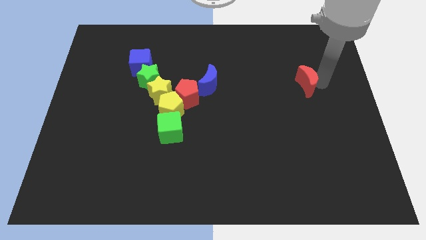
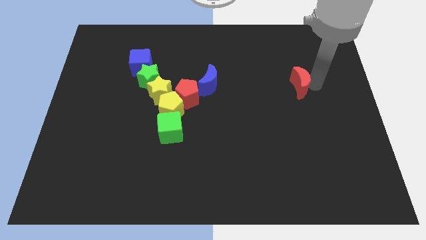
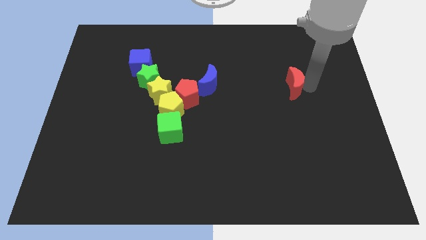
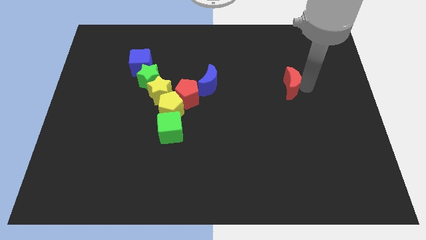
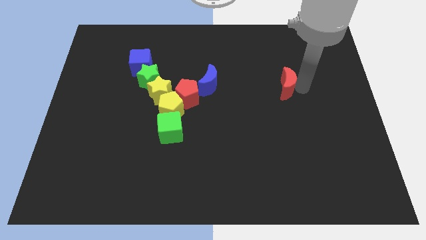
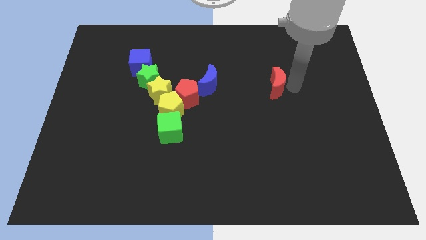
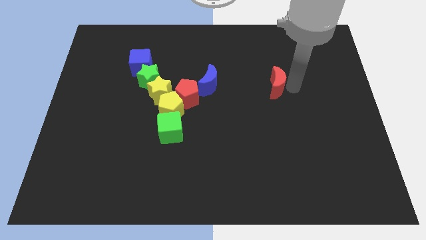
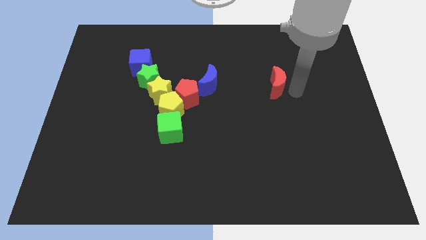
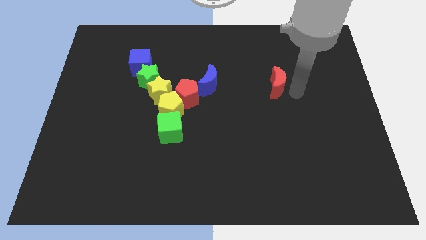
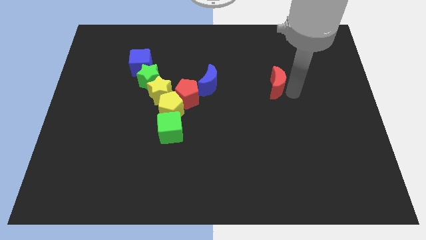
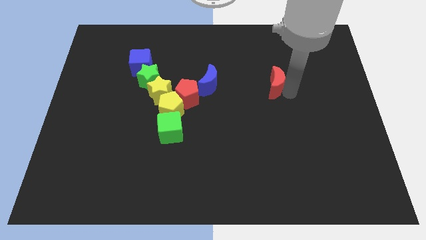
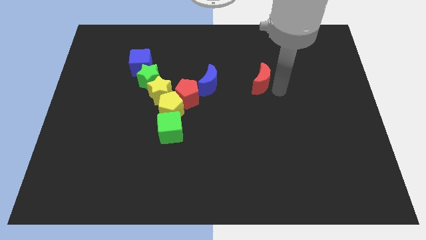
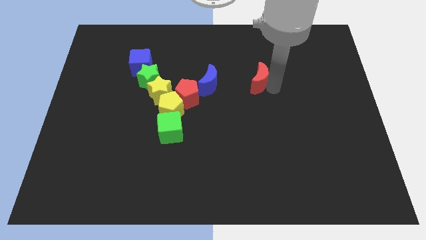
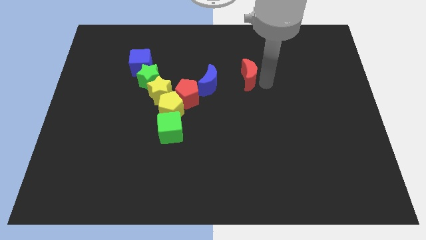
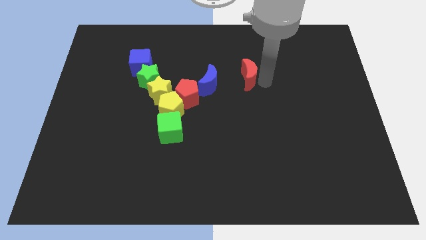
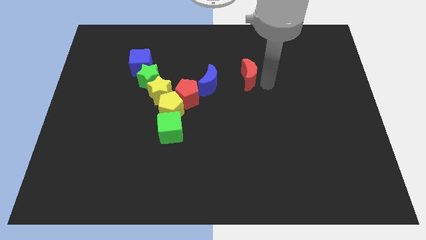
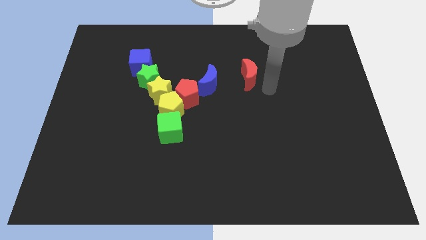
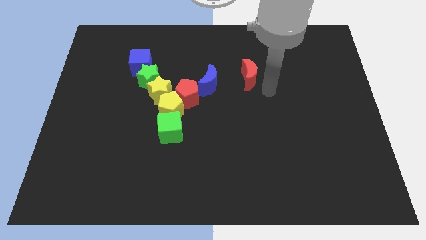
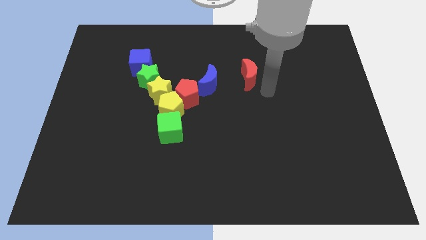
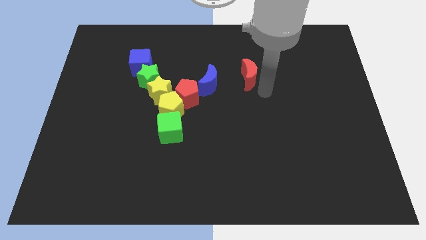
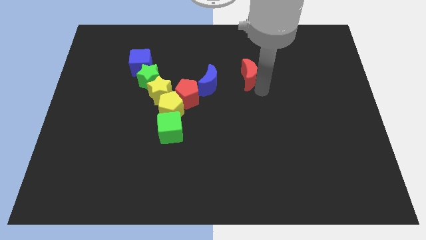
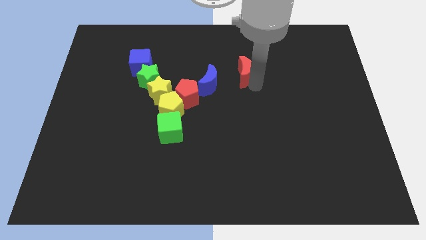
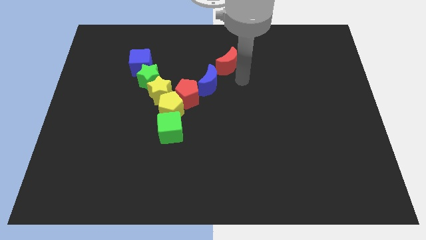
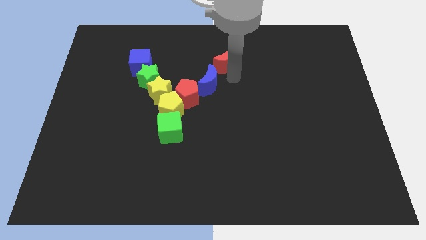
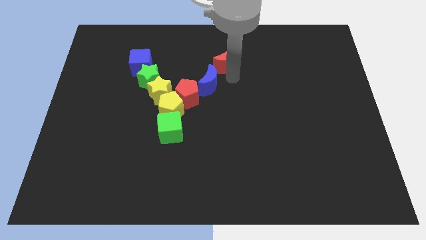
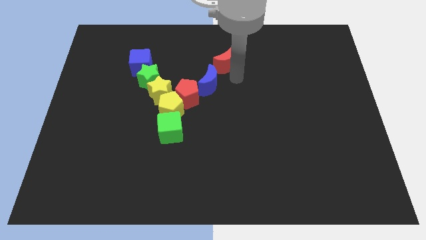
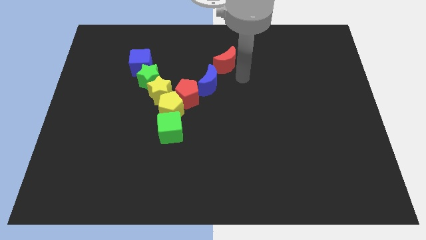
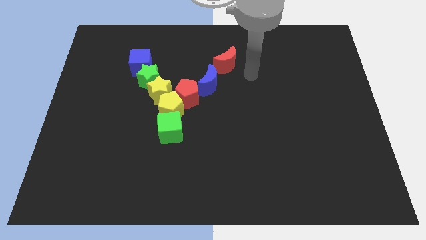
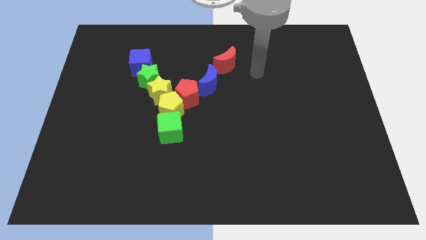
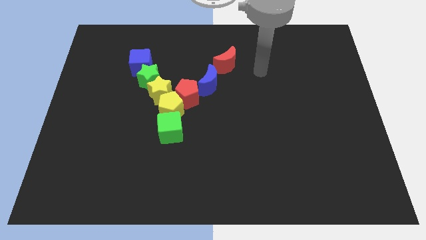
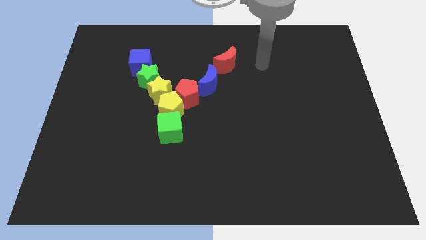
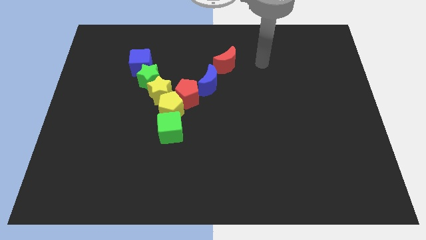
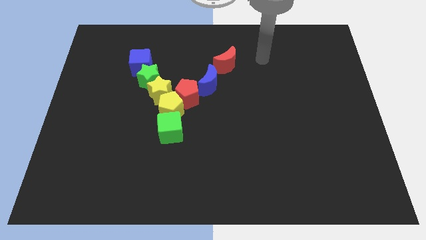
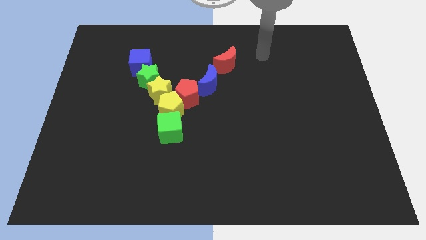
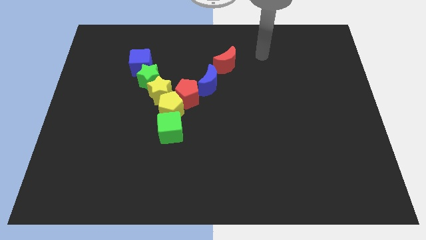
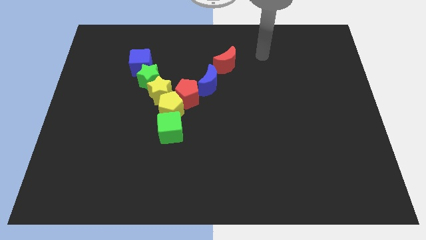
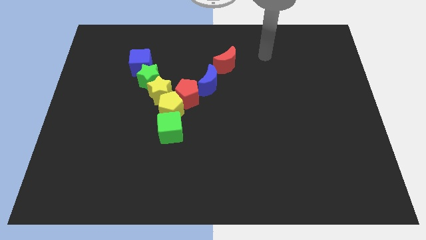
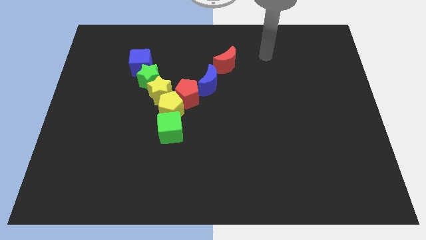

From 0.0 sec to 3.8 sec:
move the red crescent above the blue crescent

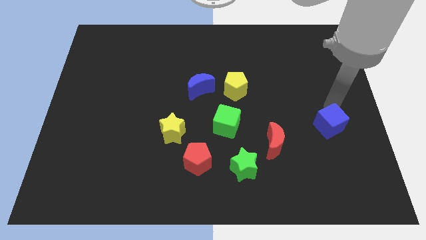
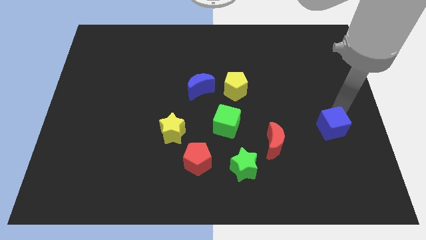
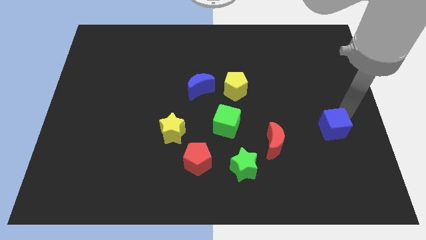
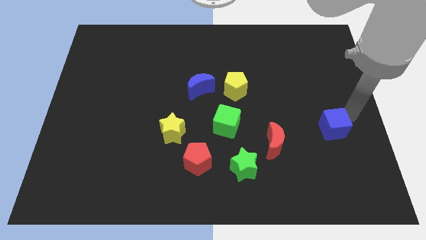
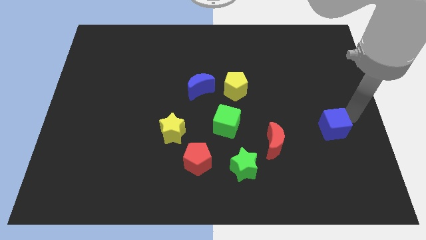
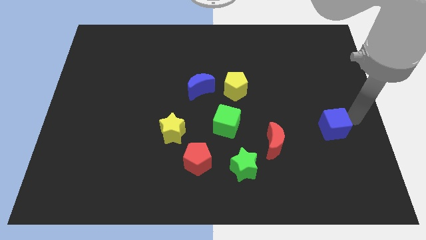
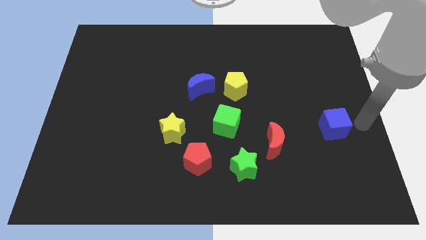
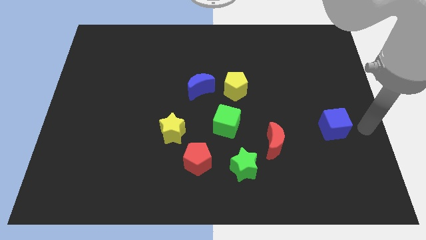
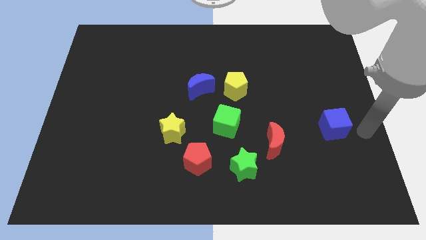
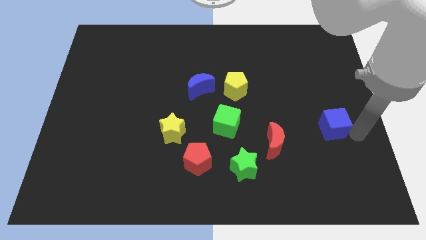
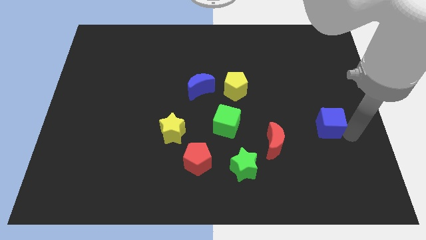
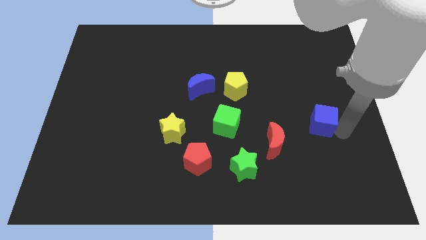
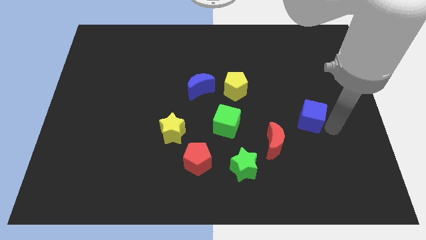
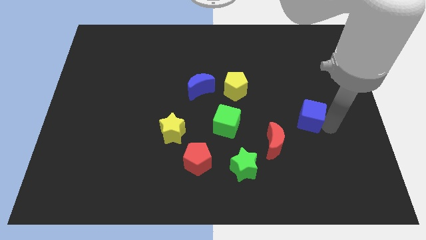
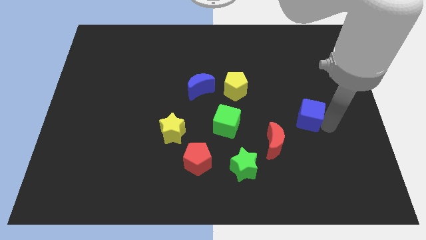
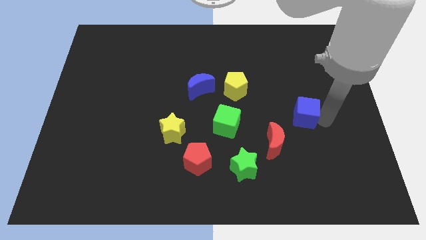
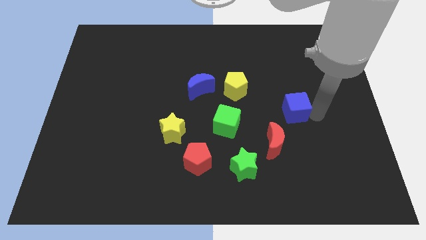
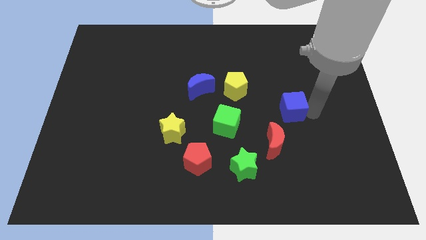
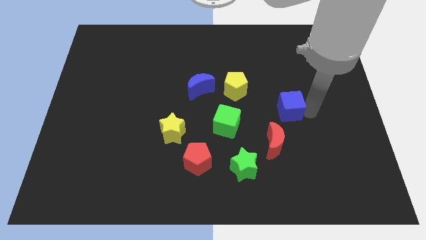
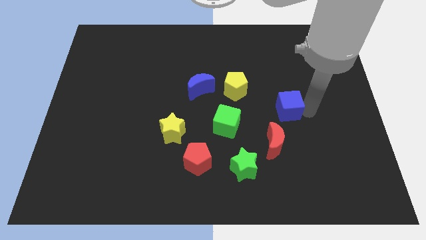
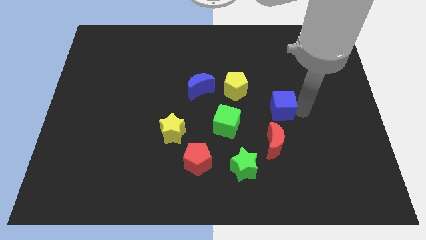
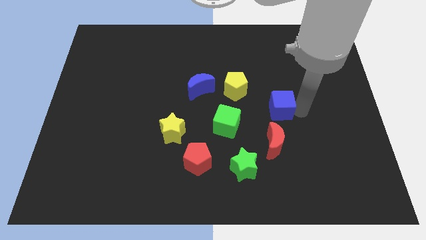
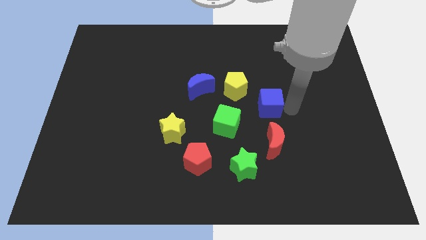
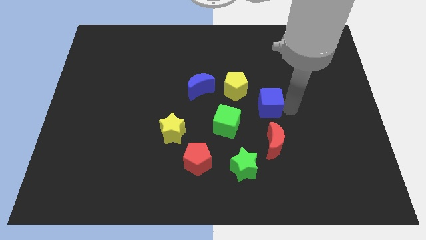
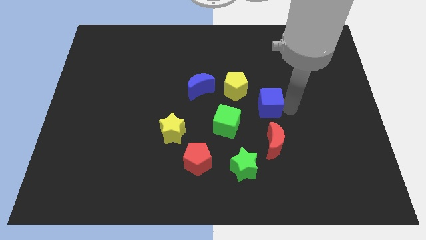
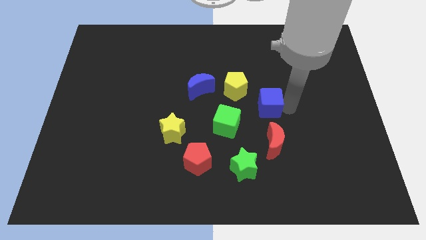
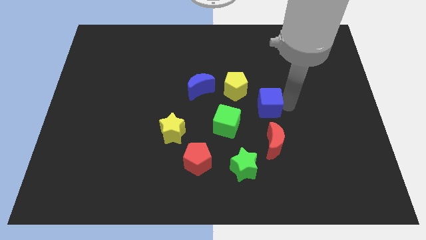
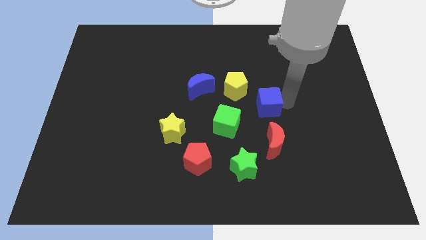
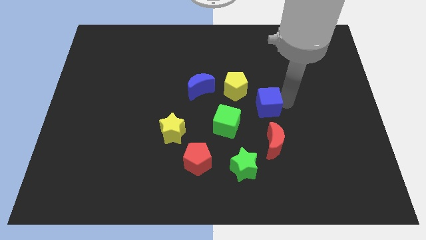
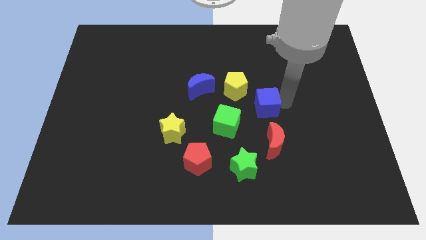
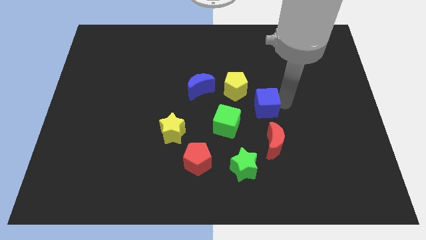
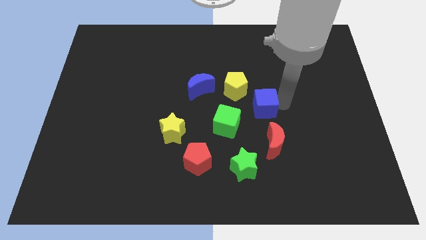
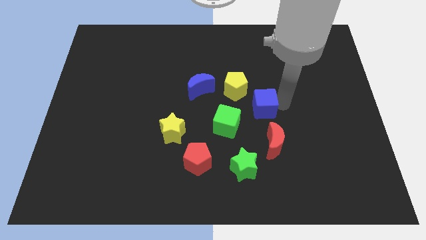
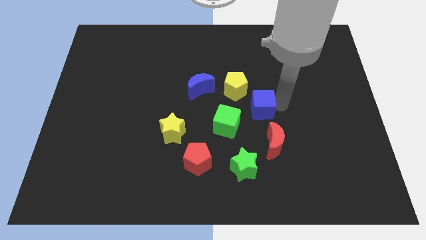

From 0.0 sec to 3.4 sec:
push the blue cube to the top of the red crescent

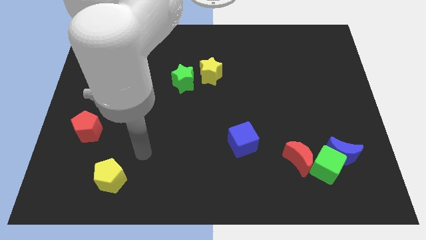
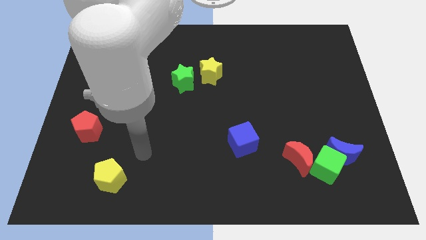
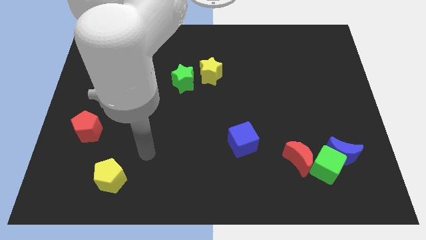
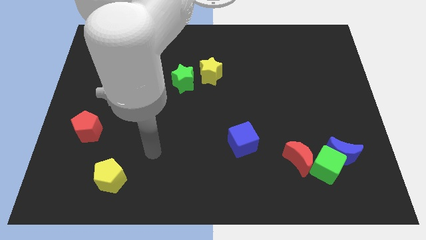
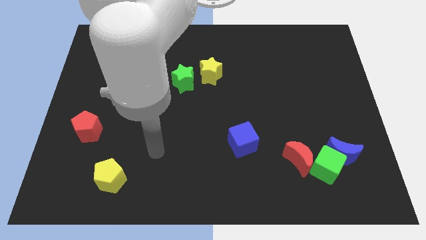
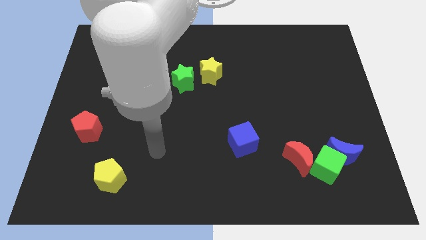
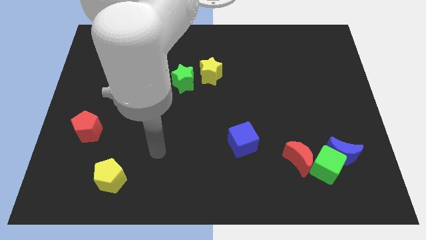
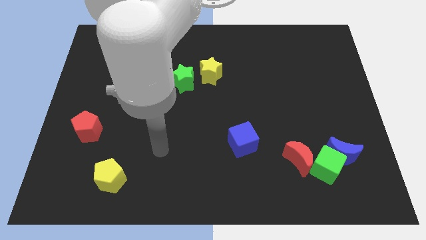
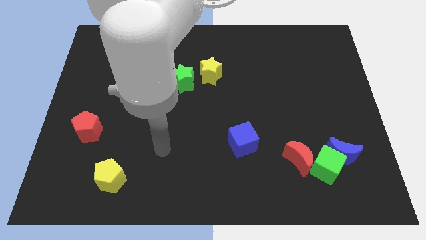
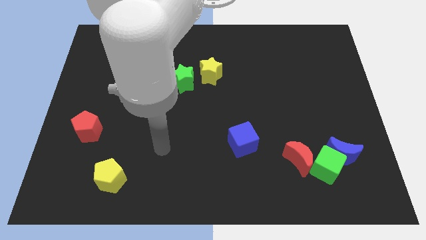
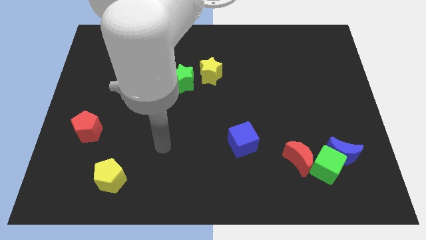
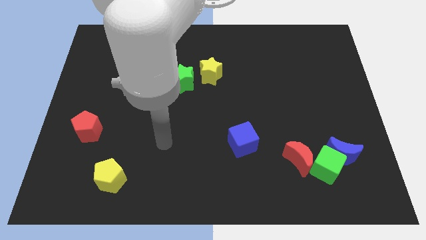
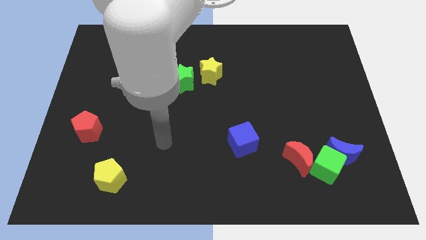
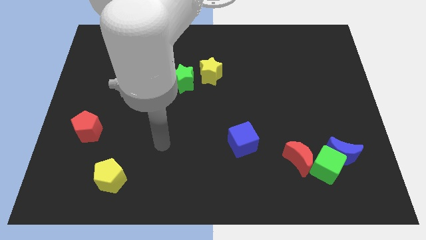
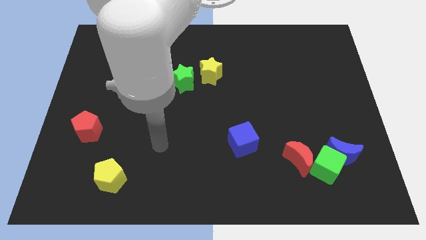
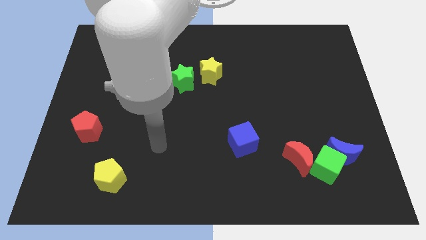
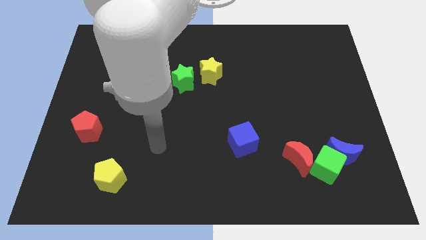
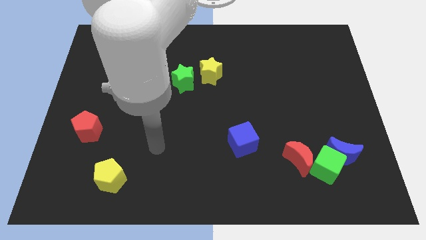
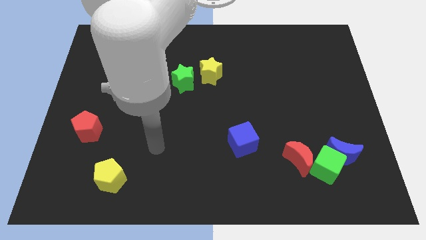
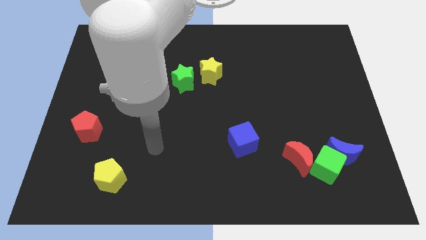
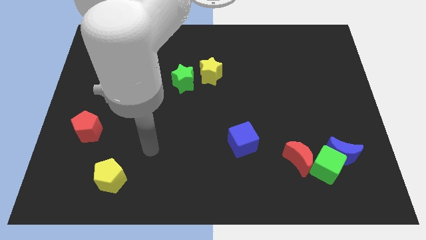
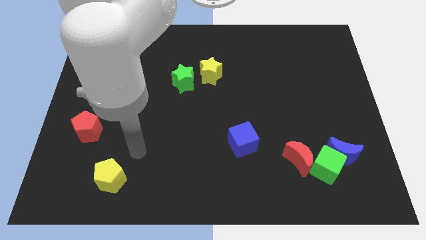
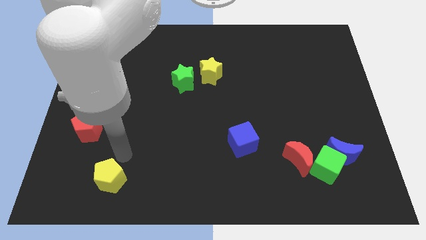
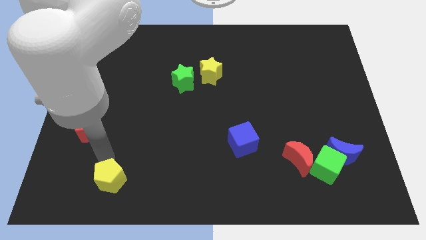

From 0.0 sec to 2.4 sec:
place the arm over the yellow pentagon
